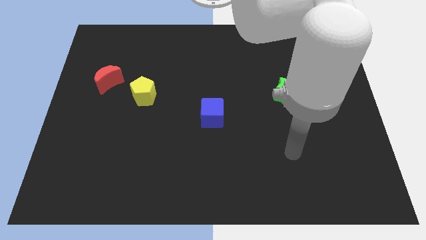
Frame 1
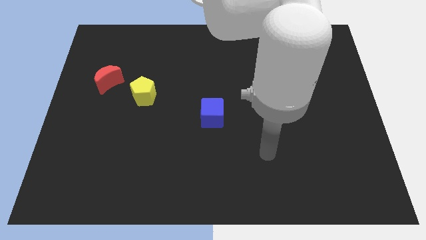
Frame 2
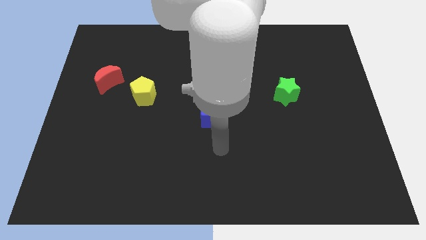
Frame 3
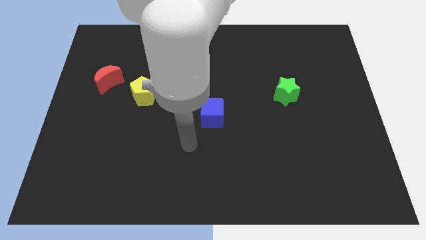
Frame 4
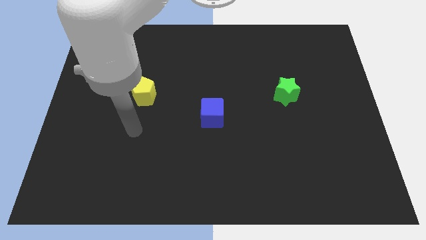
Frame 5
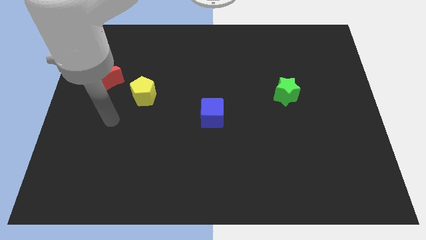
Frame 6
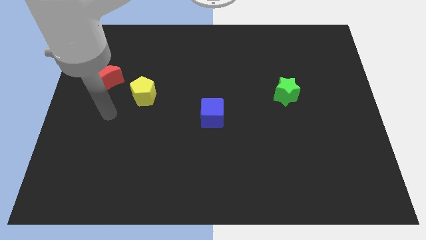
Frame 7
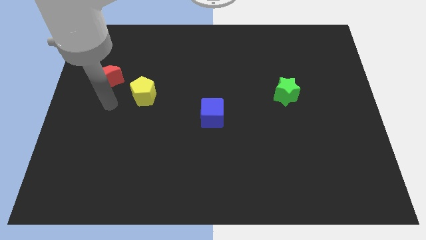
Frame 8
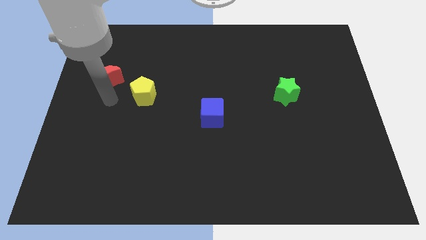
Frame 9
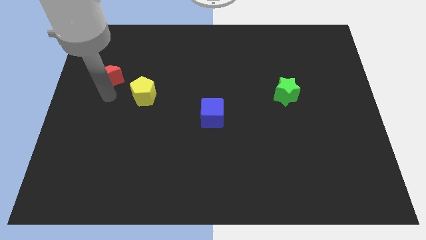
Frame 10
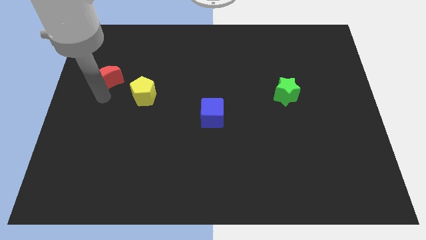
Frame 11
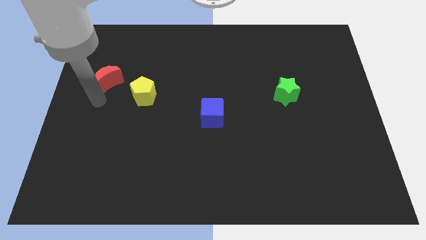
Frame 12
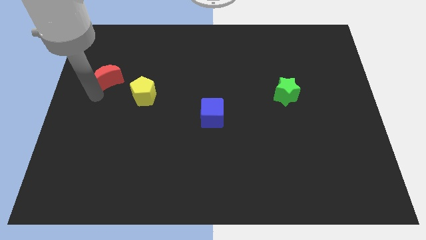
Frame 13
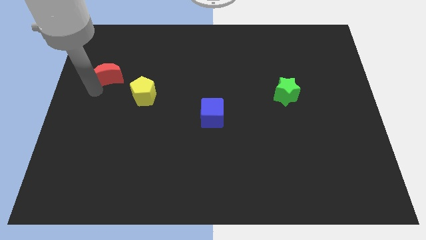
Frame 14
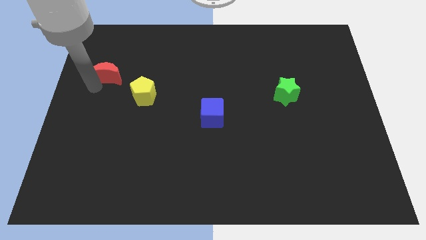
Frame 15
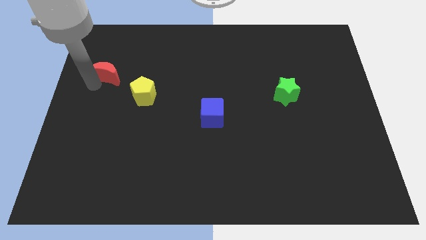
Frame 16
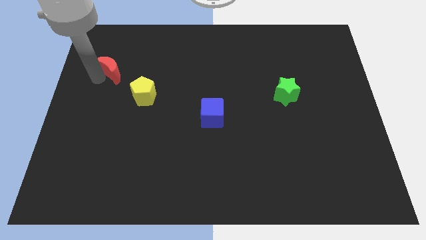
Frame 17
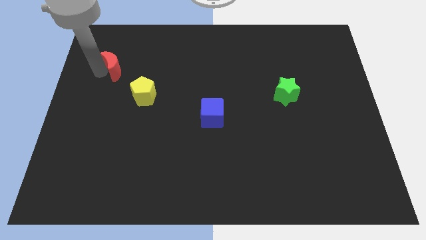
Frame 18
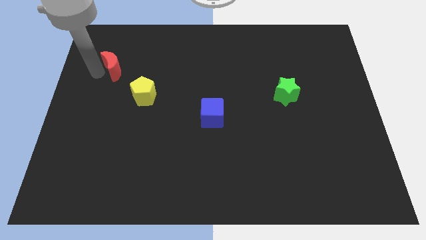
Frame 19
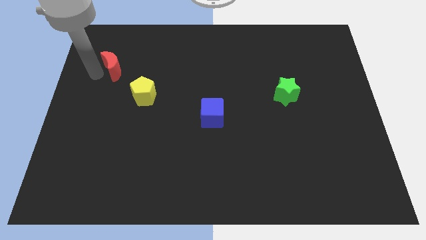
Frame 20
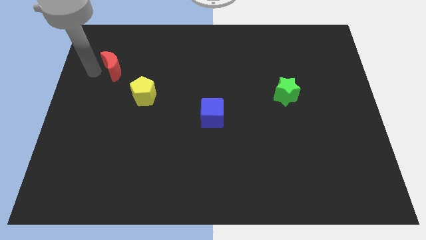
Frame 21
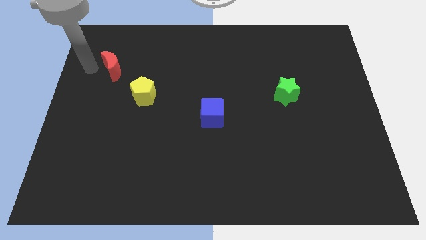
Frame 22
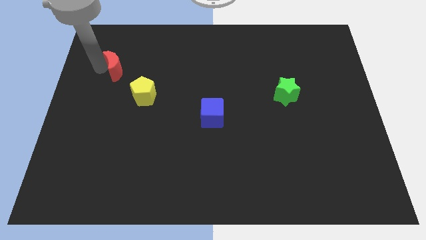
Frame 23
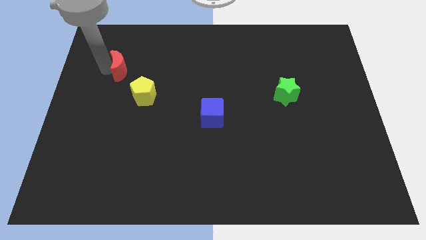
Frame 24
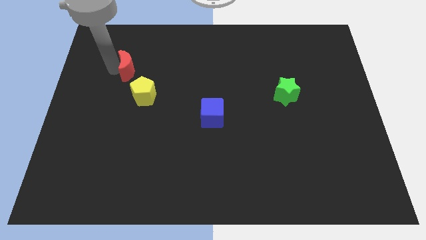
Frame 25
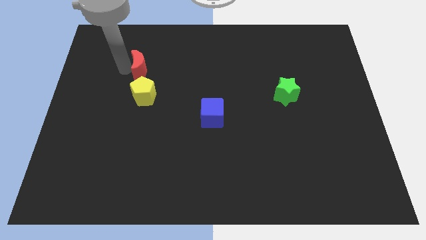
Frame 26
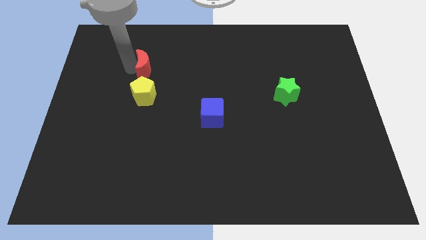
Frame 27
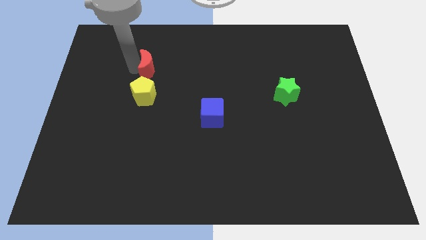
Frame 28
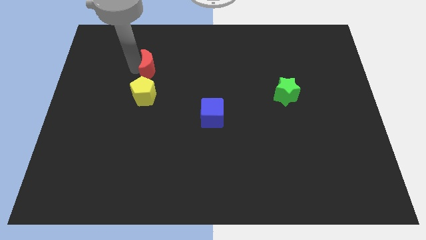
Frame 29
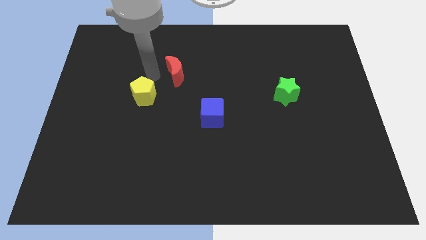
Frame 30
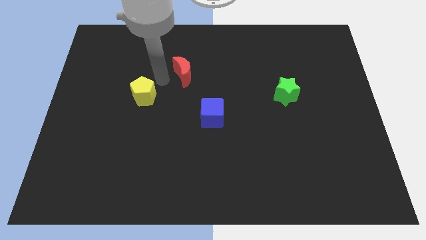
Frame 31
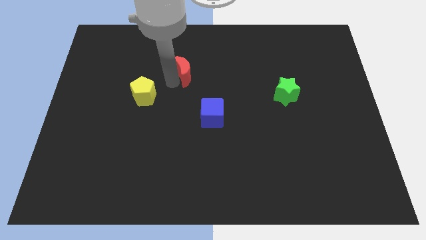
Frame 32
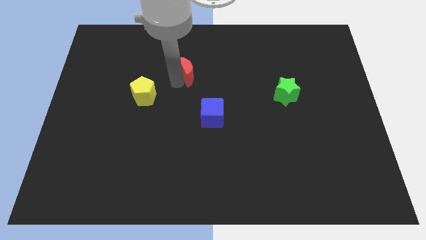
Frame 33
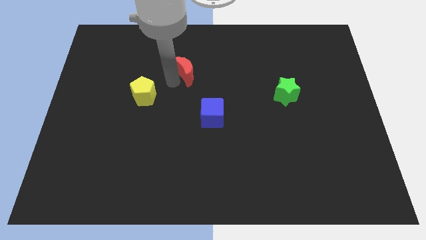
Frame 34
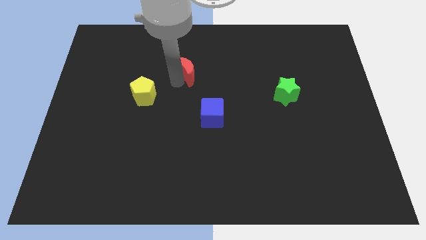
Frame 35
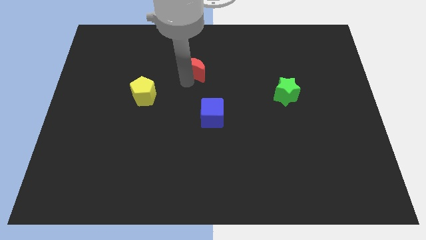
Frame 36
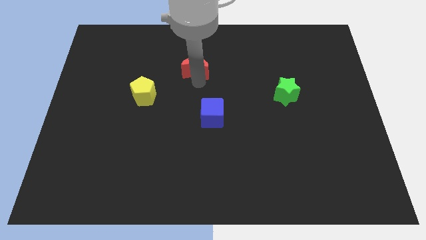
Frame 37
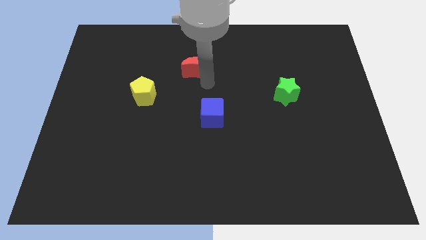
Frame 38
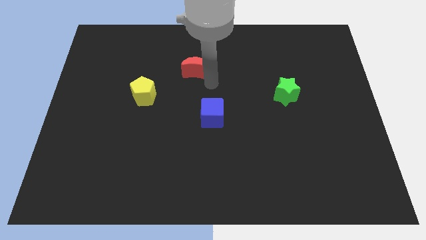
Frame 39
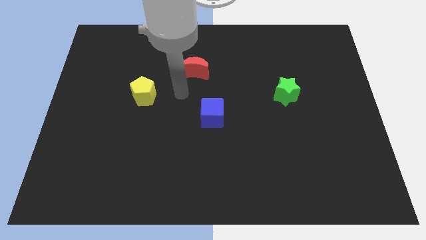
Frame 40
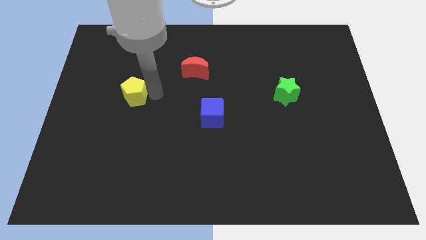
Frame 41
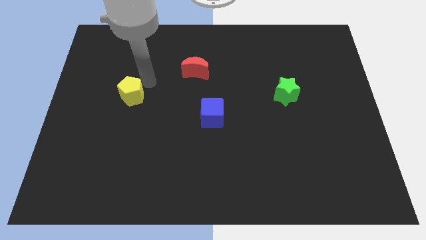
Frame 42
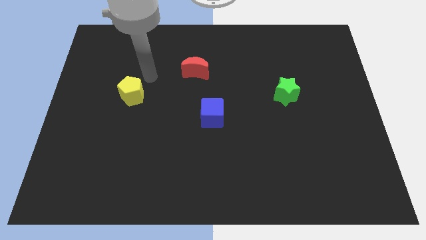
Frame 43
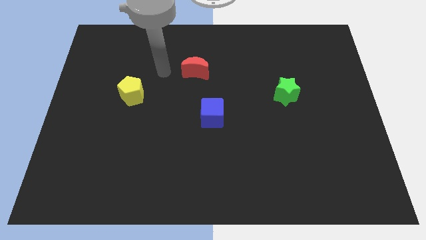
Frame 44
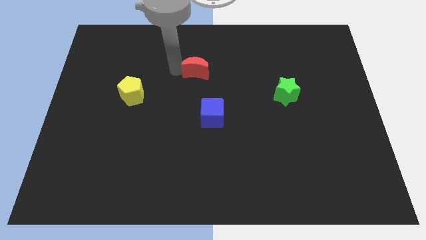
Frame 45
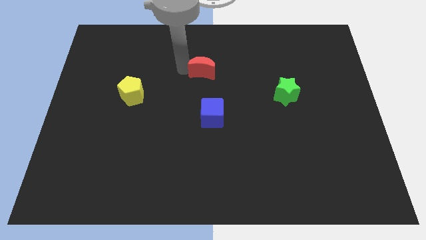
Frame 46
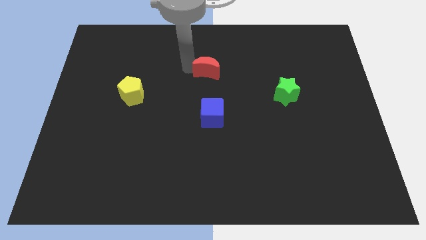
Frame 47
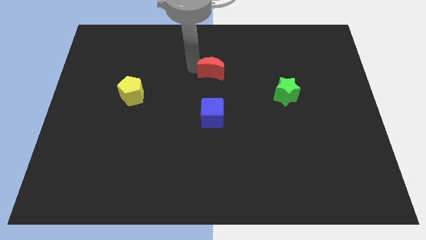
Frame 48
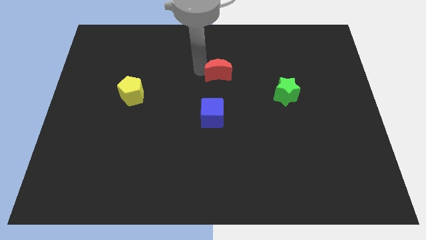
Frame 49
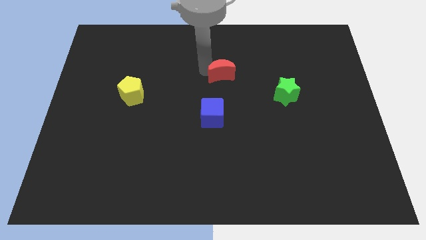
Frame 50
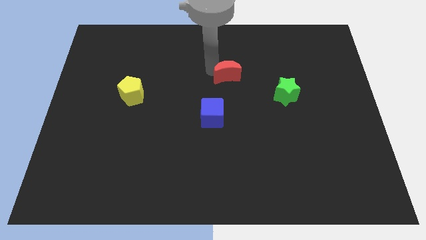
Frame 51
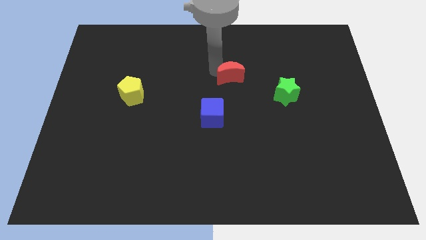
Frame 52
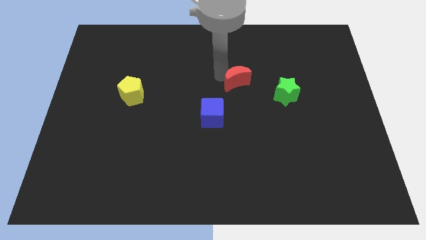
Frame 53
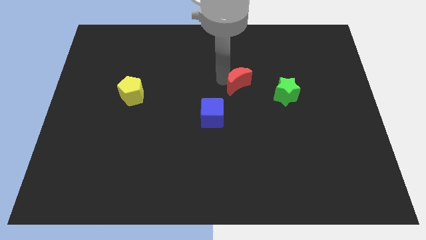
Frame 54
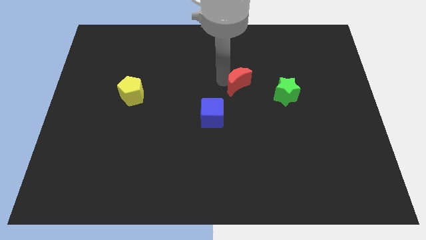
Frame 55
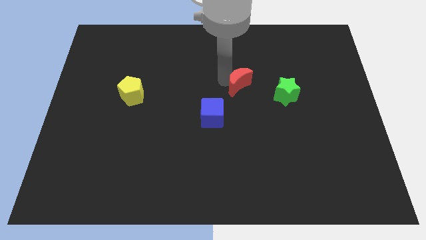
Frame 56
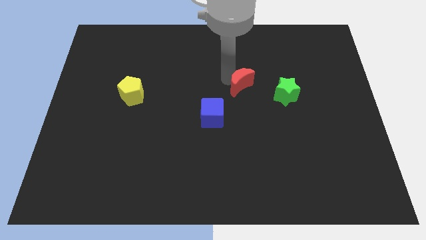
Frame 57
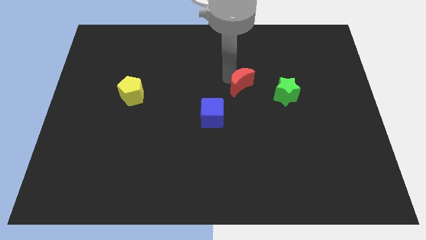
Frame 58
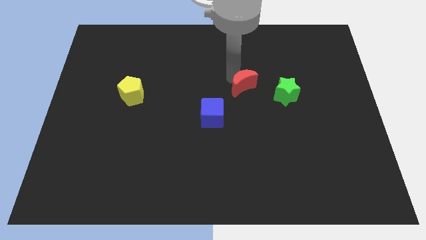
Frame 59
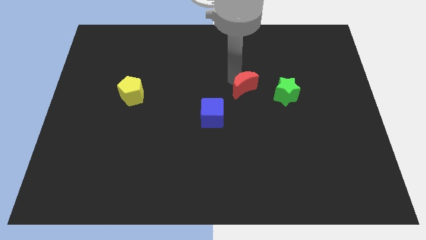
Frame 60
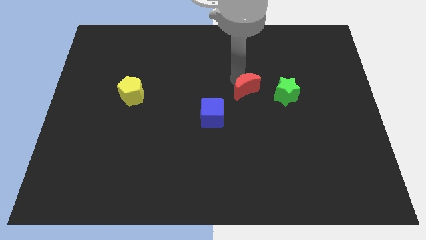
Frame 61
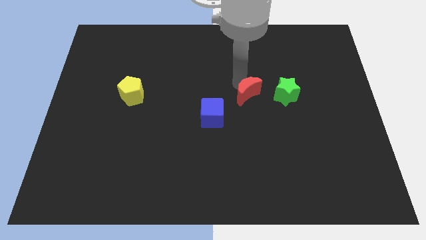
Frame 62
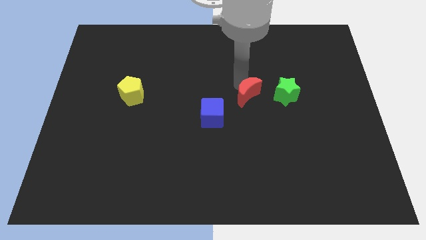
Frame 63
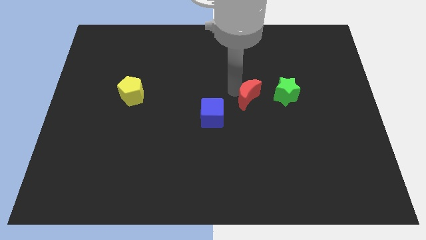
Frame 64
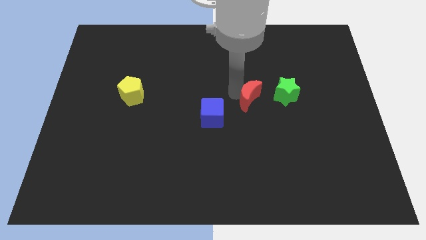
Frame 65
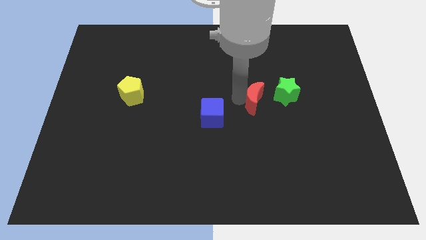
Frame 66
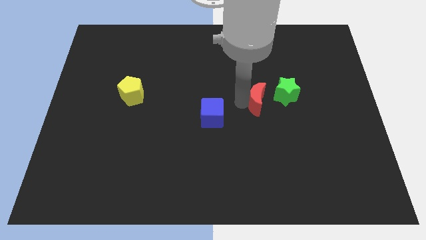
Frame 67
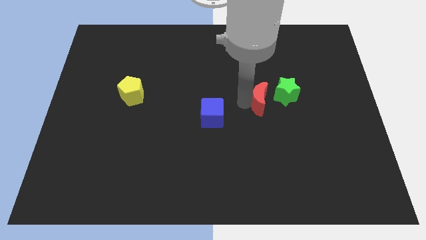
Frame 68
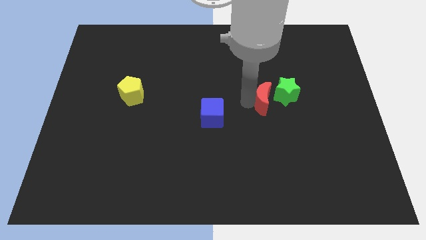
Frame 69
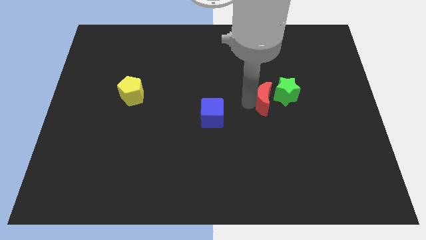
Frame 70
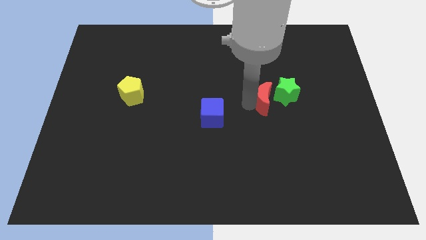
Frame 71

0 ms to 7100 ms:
move the red moon next to the green block

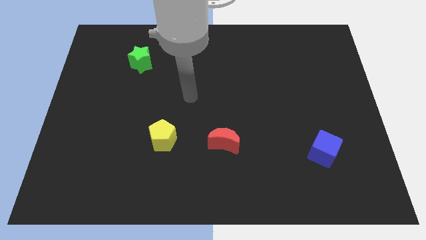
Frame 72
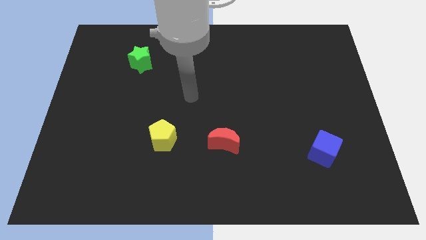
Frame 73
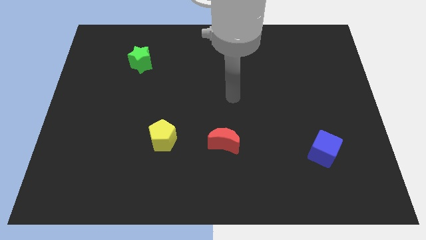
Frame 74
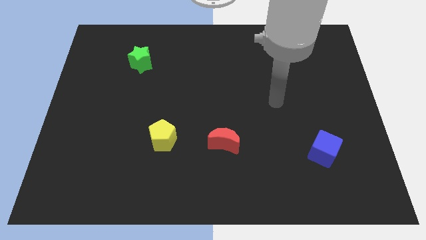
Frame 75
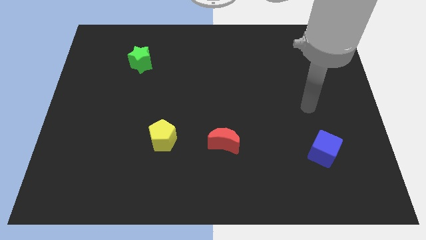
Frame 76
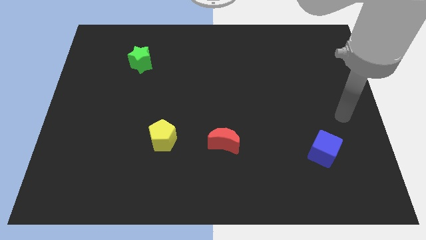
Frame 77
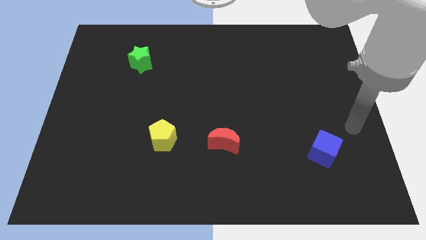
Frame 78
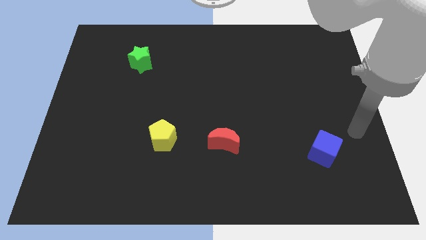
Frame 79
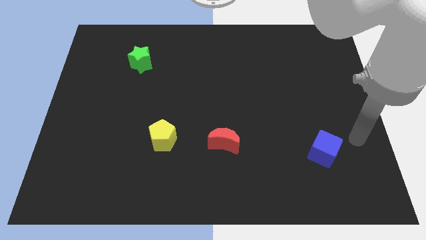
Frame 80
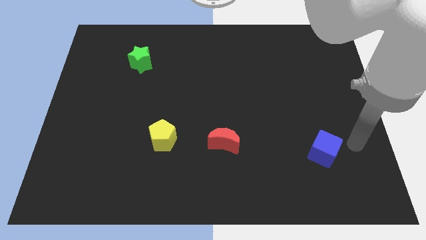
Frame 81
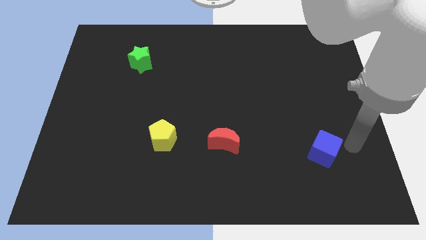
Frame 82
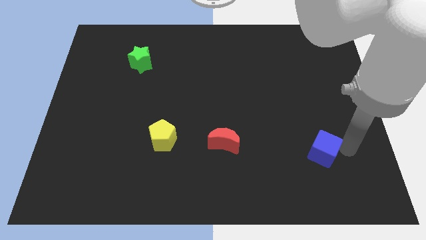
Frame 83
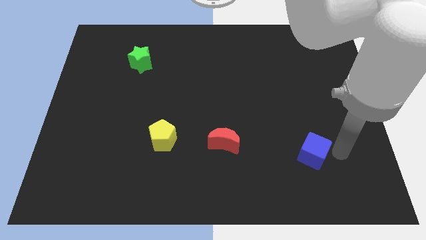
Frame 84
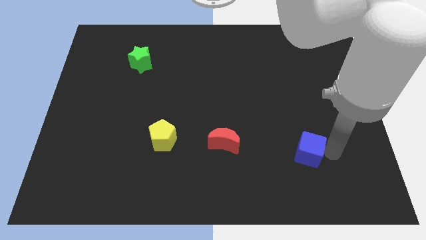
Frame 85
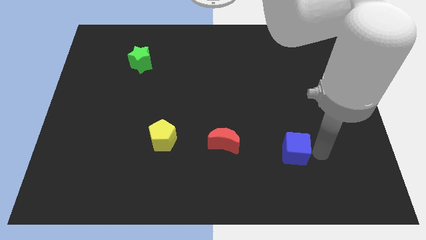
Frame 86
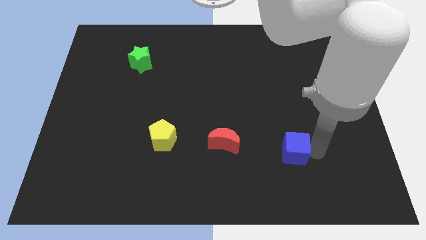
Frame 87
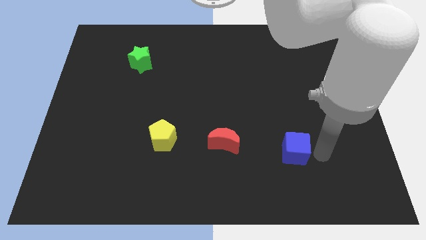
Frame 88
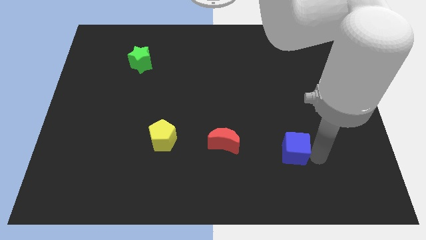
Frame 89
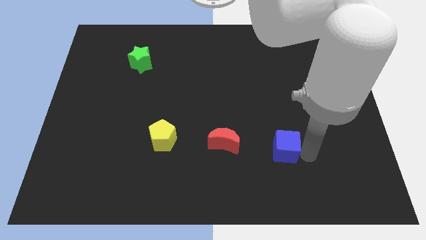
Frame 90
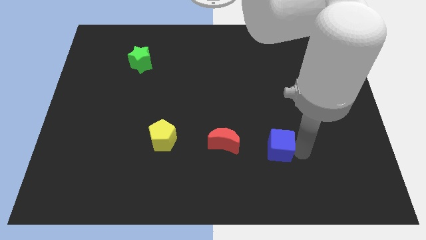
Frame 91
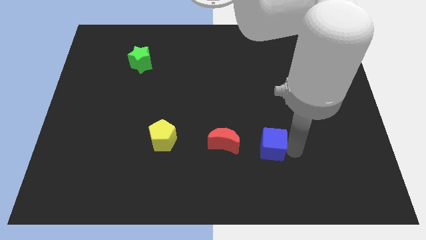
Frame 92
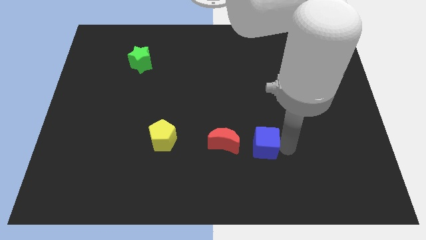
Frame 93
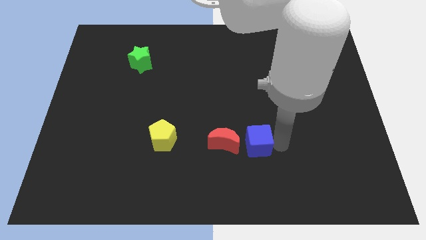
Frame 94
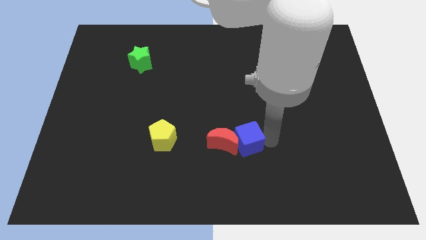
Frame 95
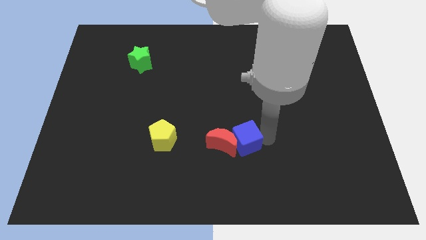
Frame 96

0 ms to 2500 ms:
slide the cube close to the red block
